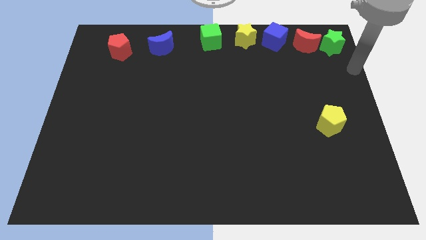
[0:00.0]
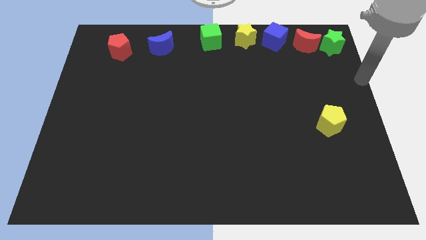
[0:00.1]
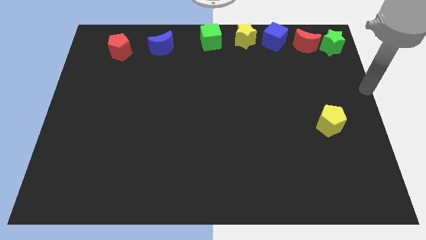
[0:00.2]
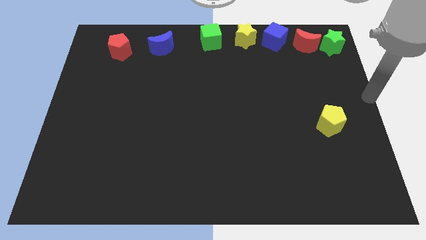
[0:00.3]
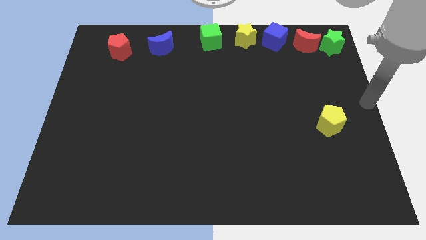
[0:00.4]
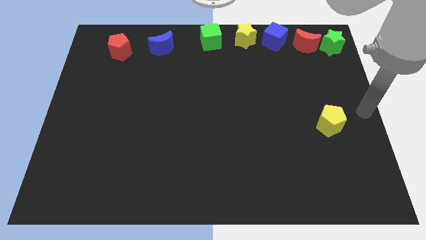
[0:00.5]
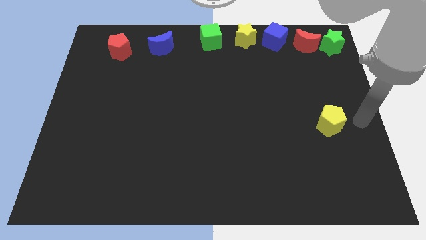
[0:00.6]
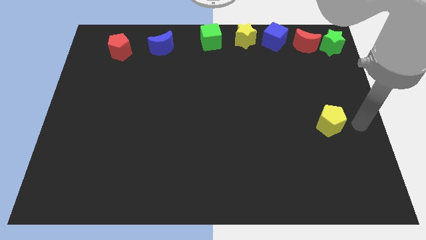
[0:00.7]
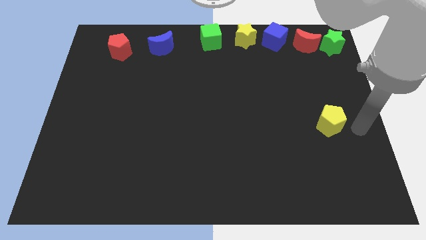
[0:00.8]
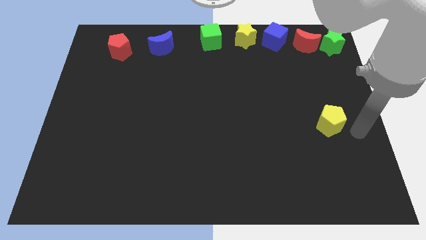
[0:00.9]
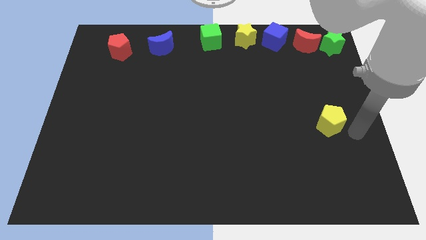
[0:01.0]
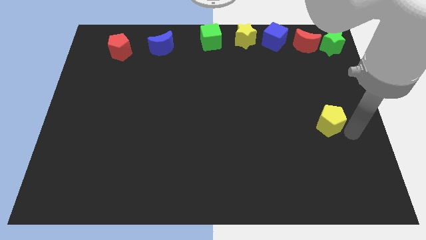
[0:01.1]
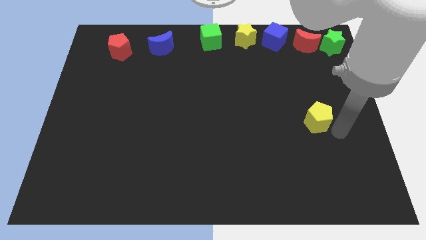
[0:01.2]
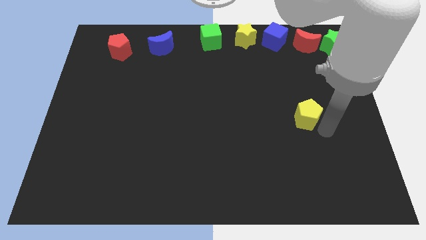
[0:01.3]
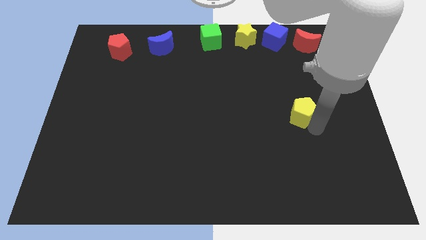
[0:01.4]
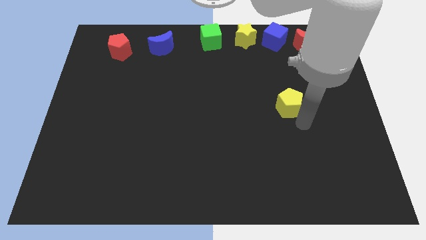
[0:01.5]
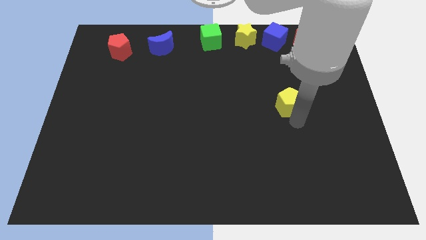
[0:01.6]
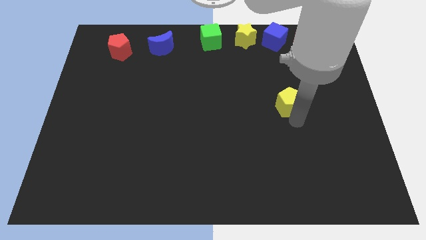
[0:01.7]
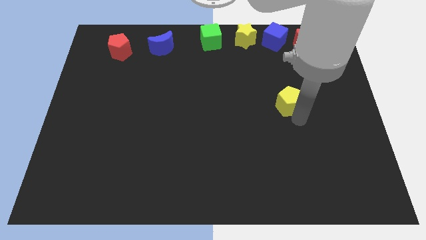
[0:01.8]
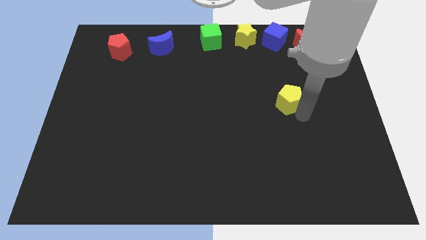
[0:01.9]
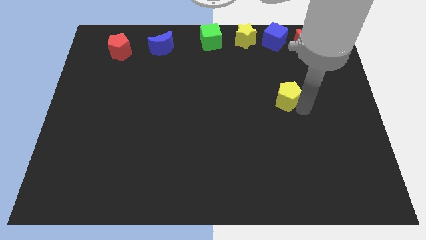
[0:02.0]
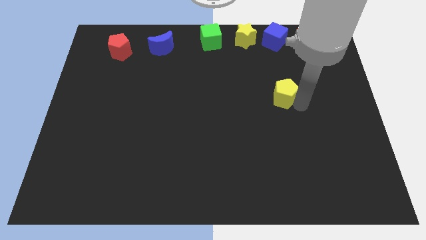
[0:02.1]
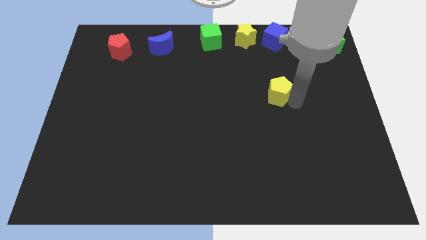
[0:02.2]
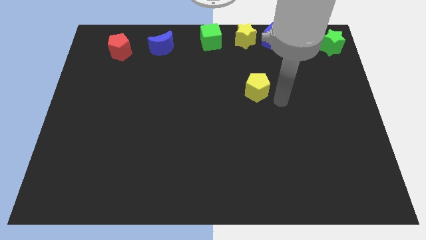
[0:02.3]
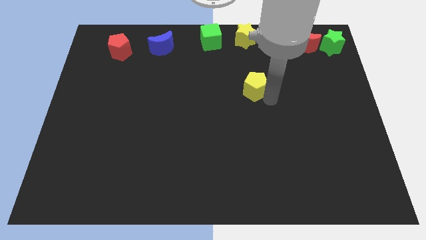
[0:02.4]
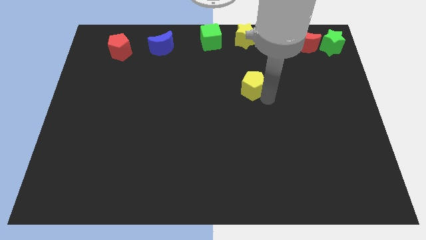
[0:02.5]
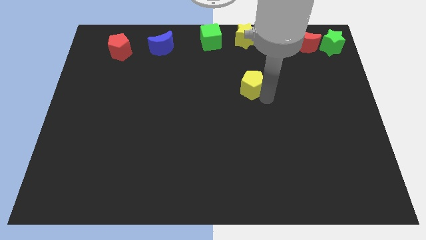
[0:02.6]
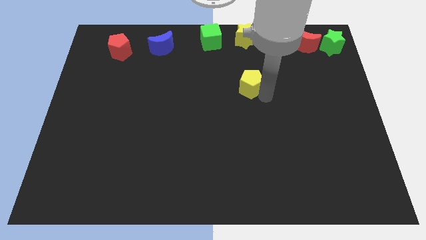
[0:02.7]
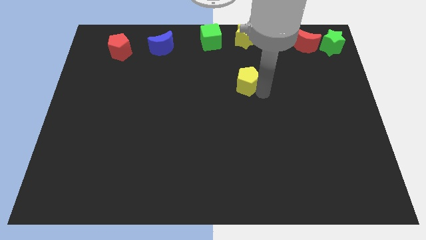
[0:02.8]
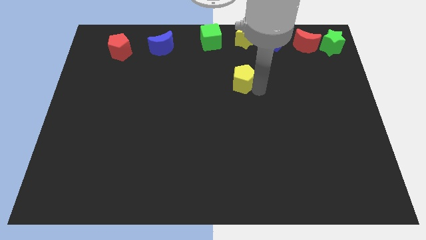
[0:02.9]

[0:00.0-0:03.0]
move the yellow pentagon towards the top

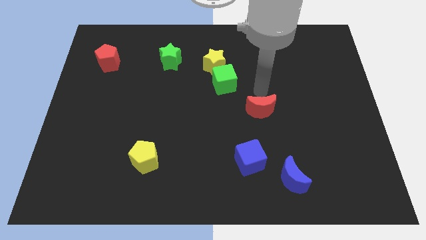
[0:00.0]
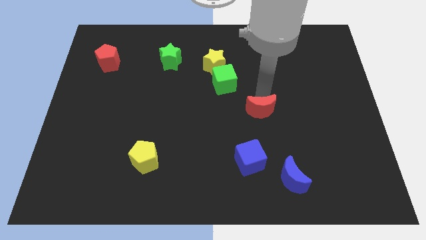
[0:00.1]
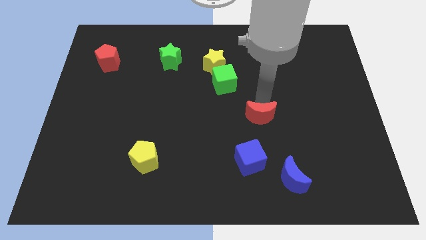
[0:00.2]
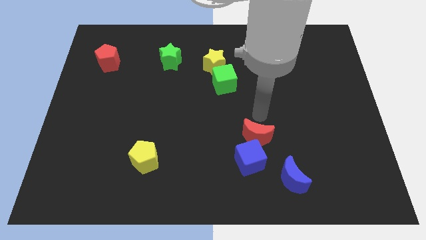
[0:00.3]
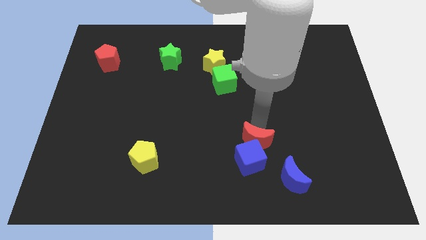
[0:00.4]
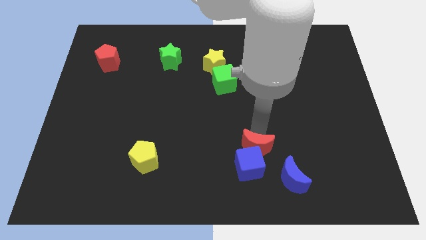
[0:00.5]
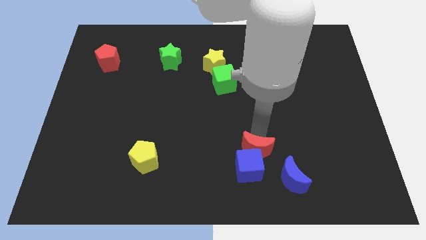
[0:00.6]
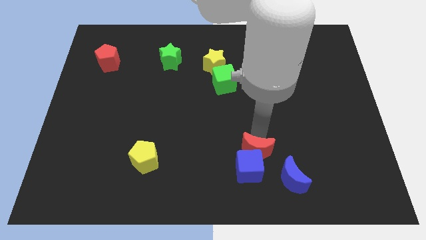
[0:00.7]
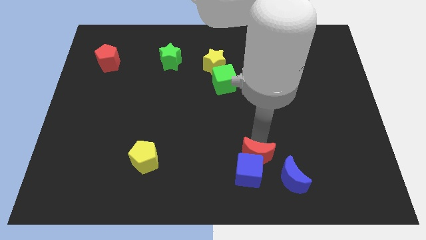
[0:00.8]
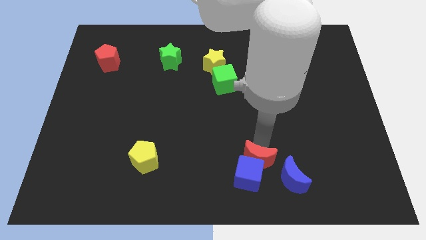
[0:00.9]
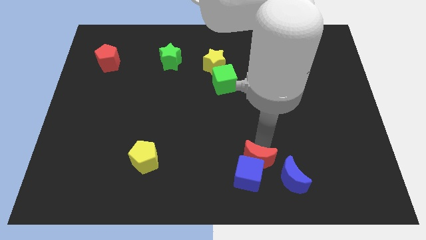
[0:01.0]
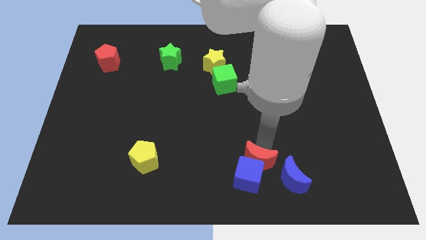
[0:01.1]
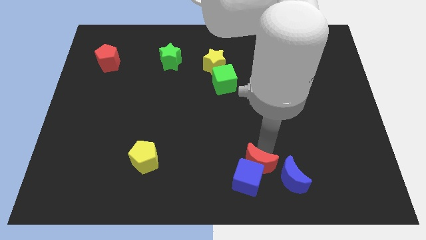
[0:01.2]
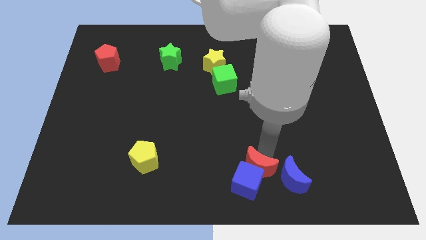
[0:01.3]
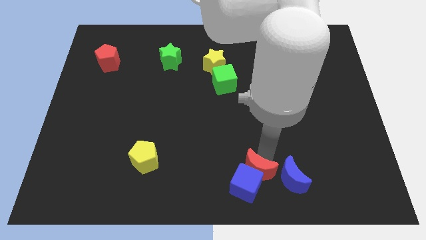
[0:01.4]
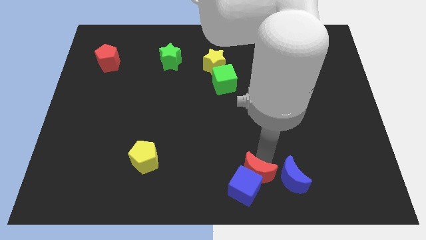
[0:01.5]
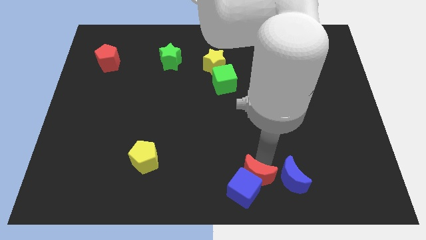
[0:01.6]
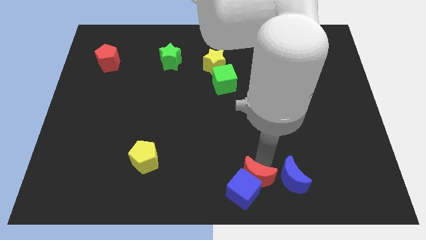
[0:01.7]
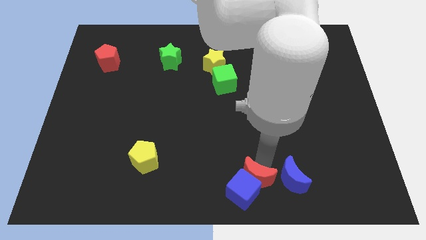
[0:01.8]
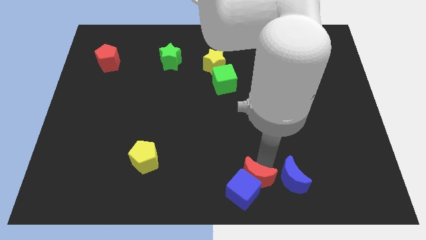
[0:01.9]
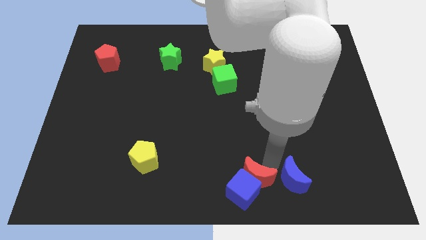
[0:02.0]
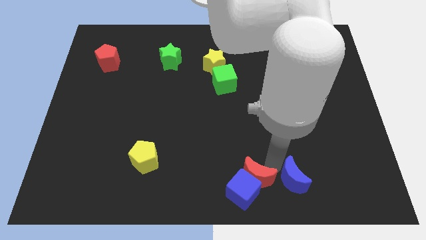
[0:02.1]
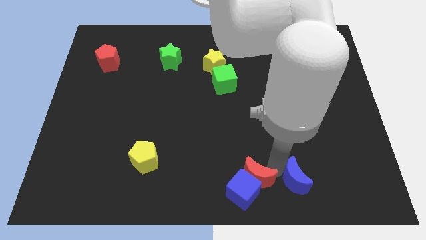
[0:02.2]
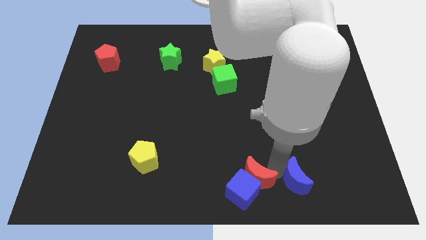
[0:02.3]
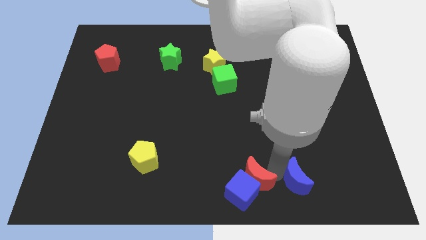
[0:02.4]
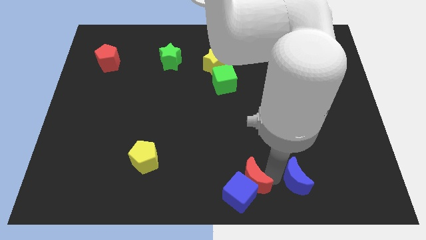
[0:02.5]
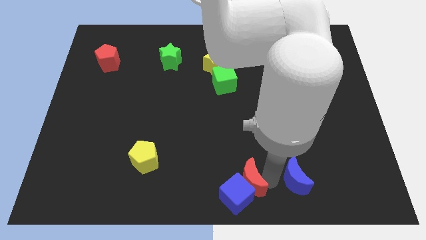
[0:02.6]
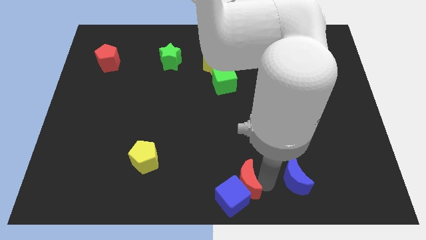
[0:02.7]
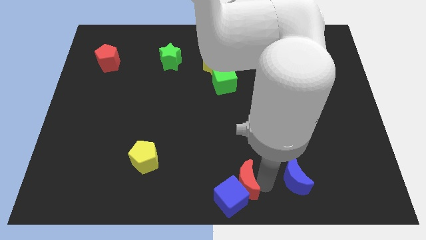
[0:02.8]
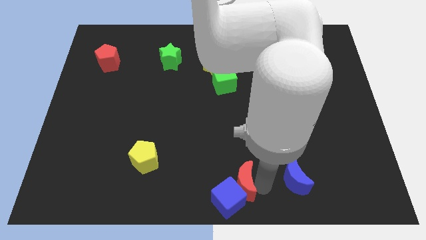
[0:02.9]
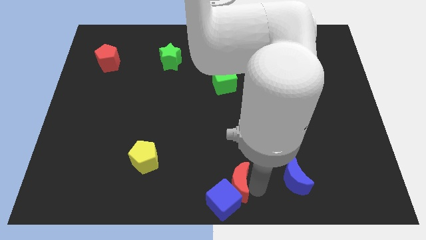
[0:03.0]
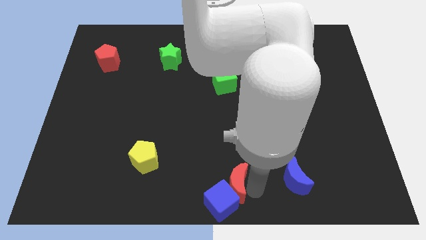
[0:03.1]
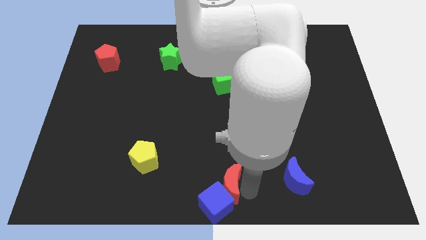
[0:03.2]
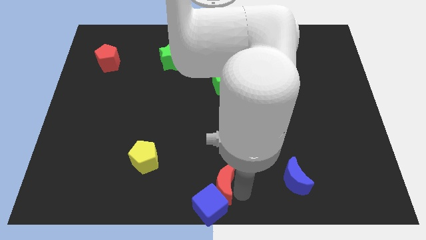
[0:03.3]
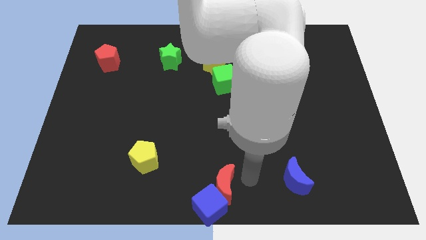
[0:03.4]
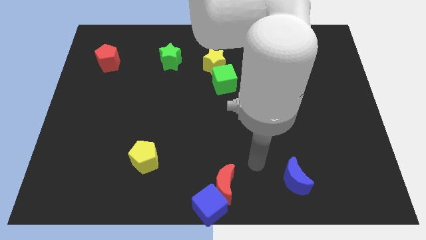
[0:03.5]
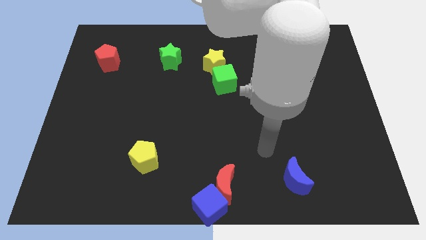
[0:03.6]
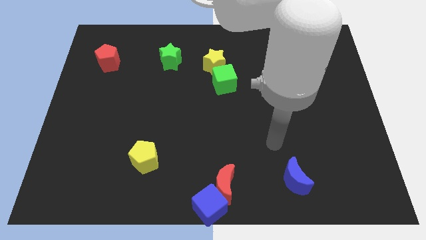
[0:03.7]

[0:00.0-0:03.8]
move the red moon and blue cube at bottom center

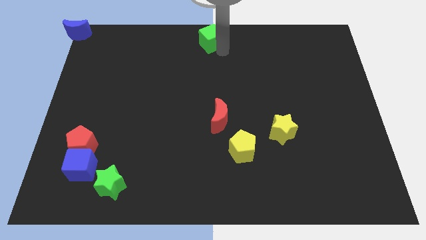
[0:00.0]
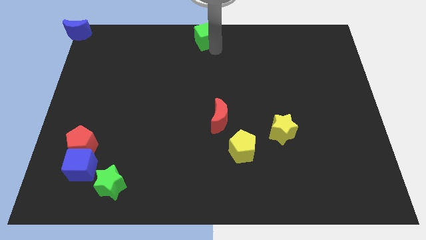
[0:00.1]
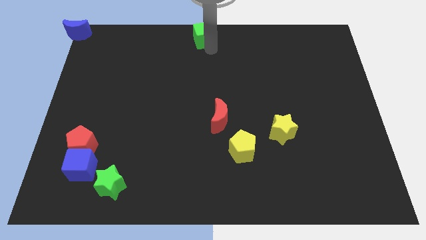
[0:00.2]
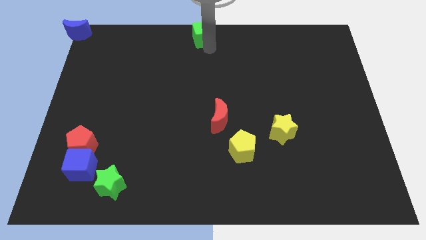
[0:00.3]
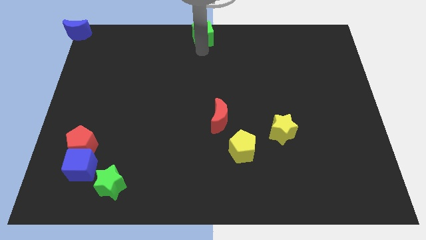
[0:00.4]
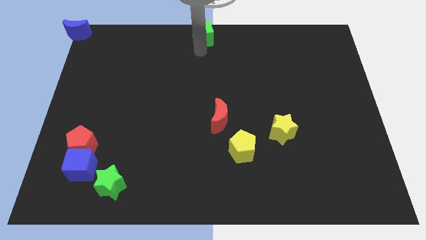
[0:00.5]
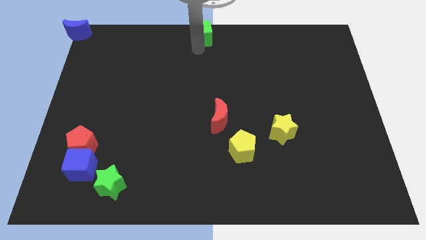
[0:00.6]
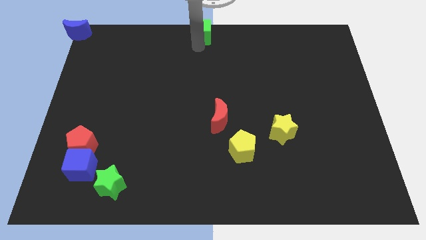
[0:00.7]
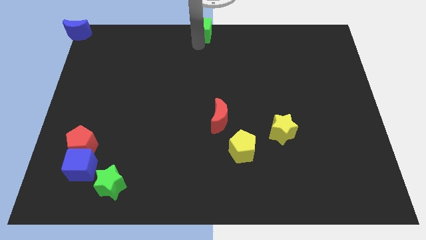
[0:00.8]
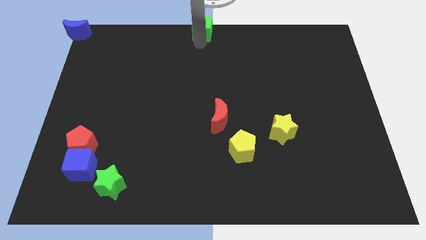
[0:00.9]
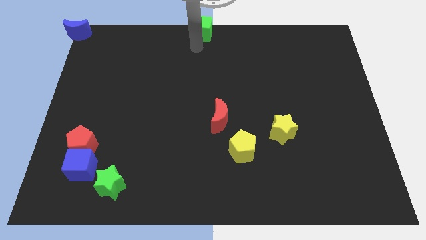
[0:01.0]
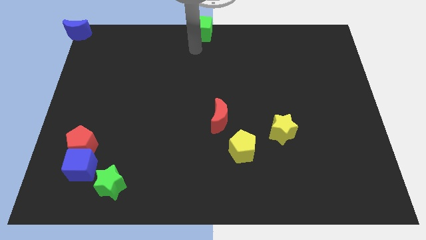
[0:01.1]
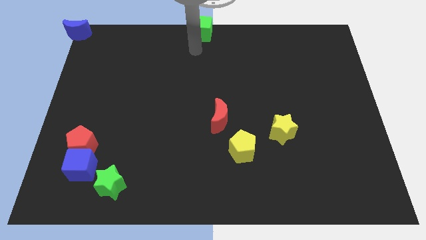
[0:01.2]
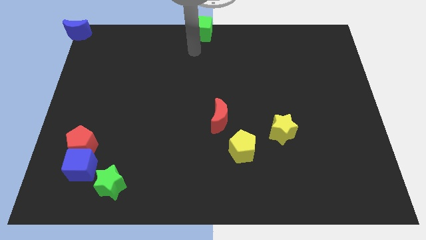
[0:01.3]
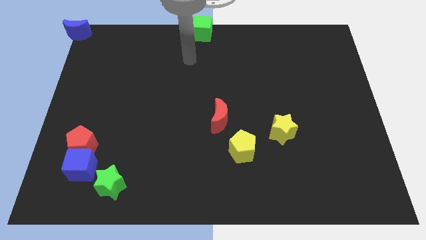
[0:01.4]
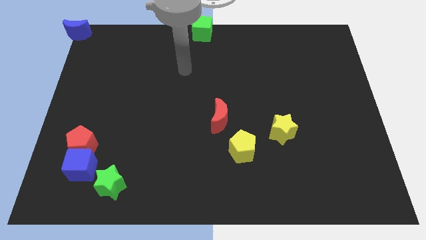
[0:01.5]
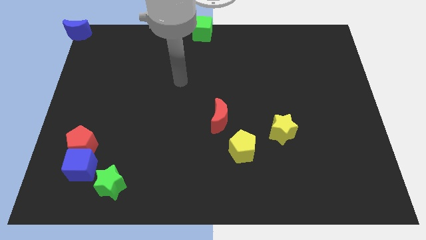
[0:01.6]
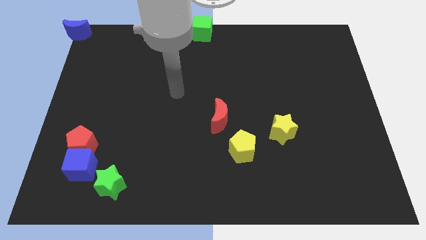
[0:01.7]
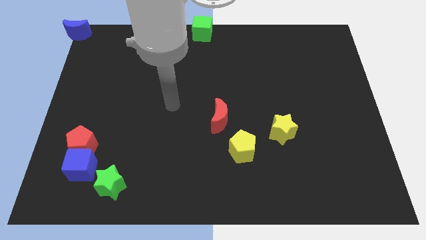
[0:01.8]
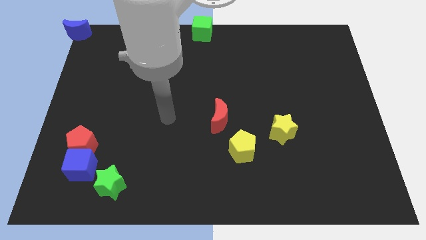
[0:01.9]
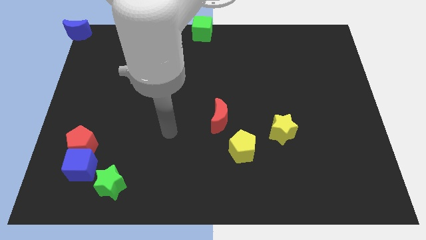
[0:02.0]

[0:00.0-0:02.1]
move the arm away from the green cube

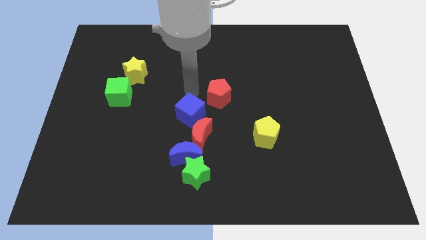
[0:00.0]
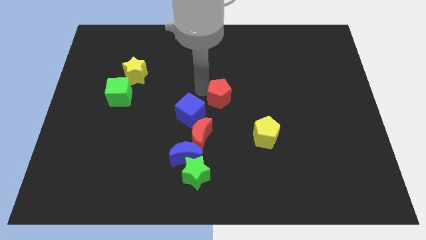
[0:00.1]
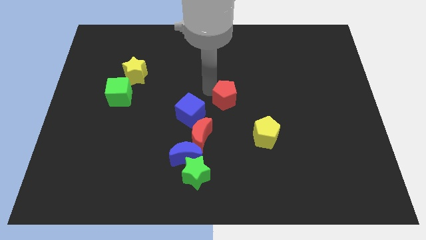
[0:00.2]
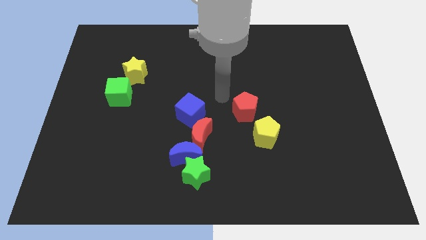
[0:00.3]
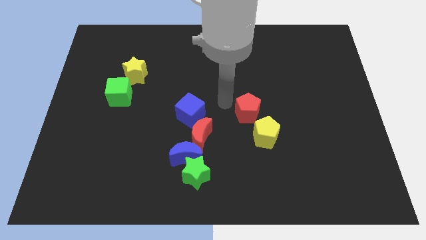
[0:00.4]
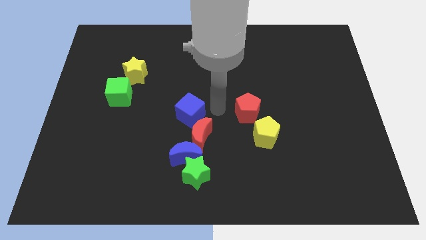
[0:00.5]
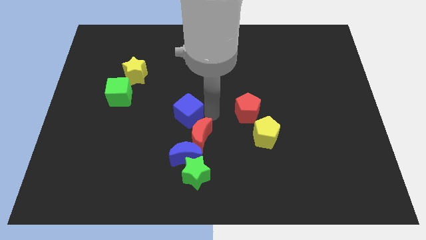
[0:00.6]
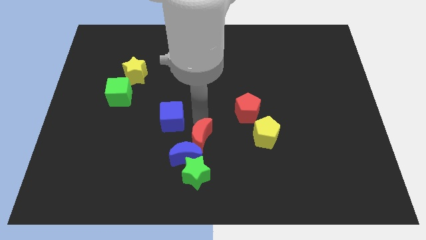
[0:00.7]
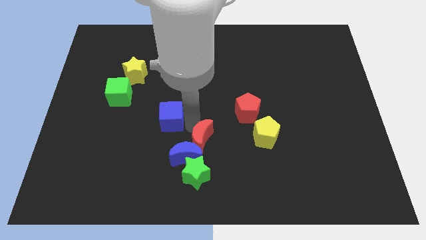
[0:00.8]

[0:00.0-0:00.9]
separate the red pentagon and the blue cube
